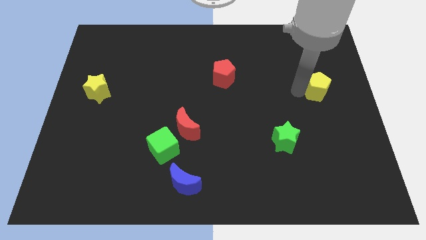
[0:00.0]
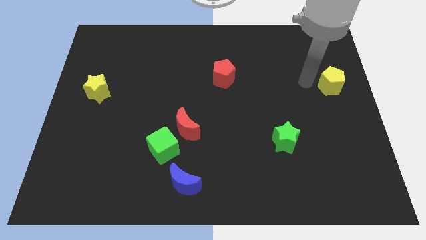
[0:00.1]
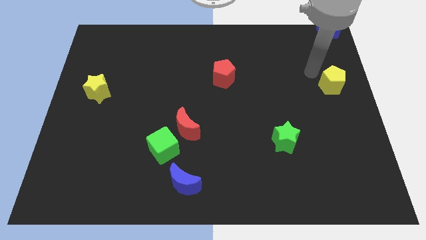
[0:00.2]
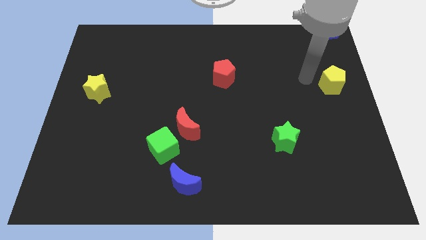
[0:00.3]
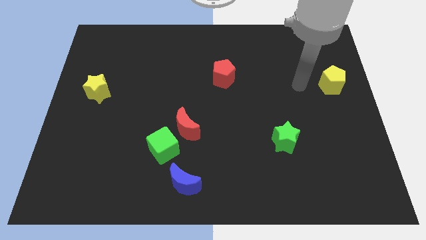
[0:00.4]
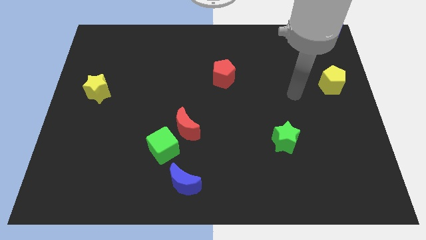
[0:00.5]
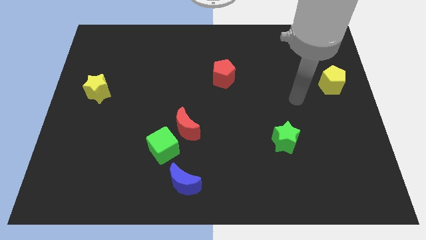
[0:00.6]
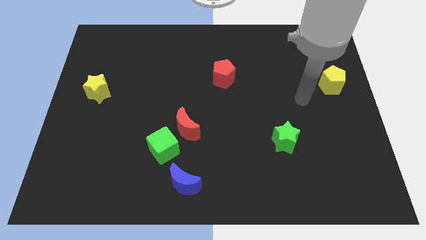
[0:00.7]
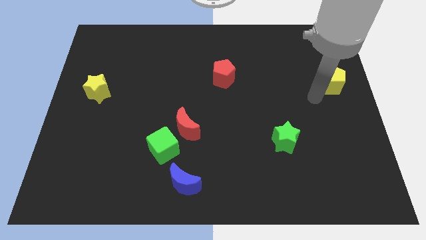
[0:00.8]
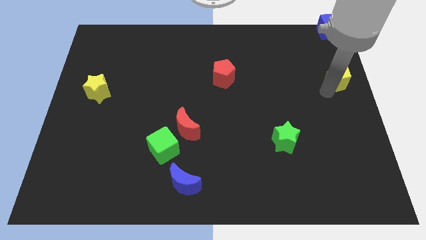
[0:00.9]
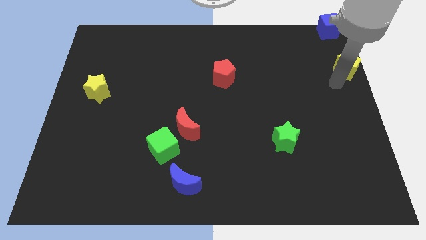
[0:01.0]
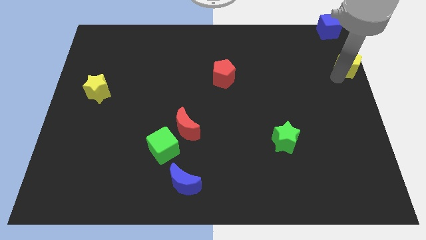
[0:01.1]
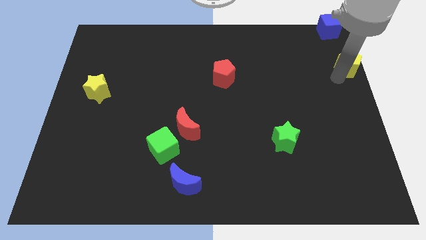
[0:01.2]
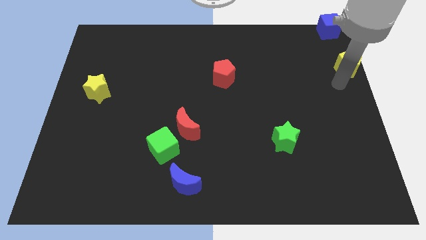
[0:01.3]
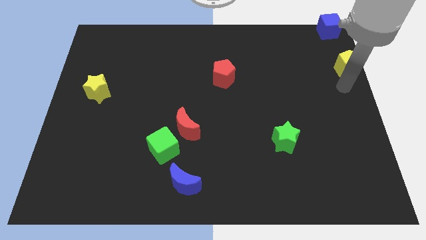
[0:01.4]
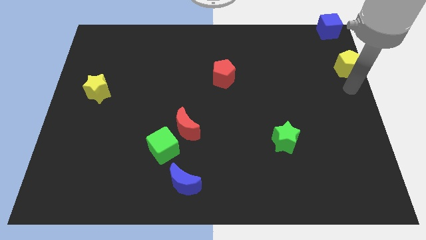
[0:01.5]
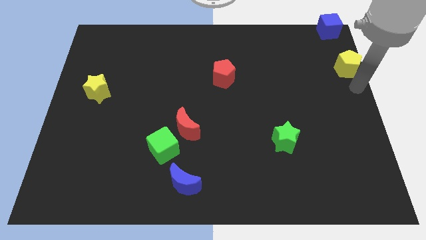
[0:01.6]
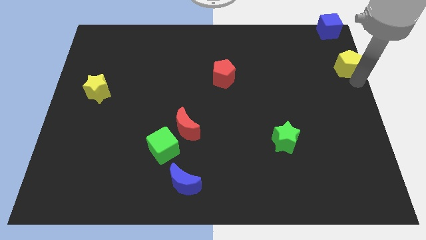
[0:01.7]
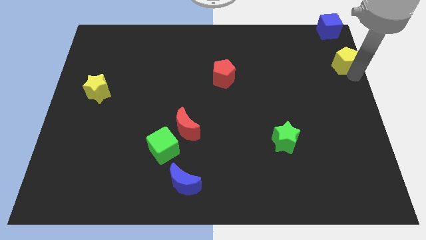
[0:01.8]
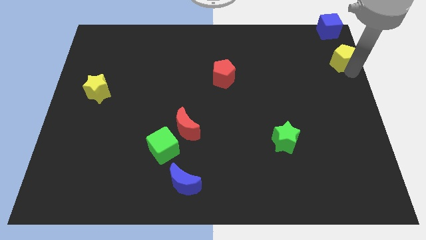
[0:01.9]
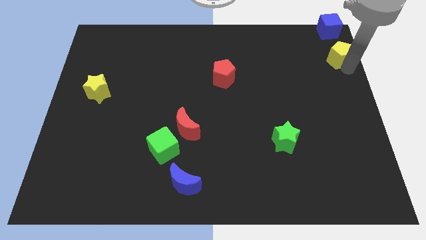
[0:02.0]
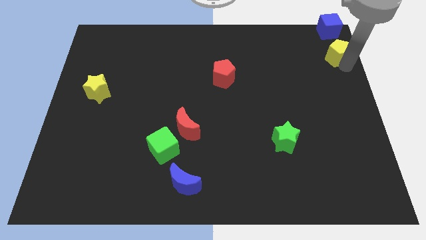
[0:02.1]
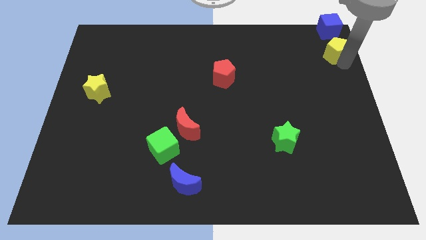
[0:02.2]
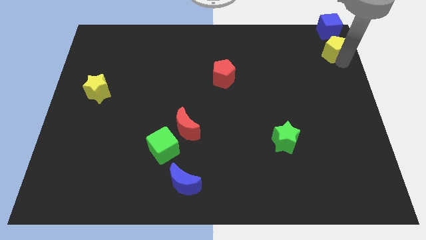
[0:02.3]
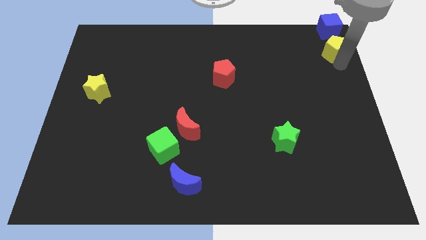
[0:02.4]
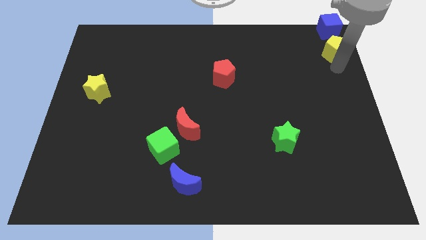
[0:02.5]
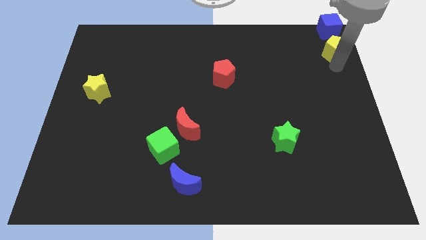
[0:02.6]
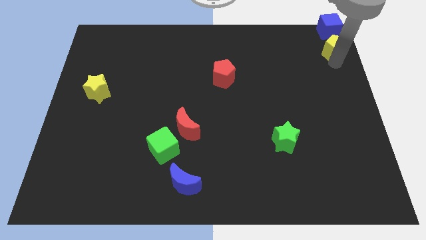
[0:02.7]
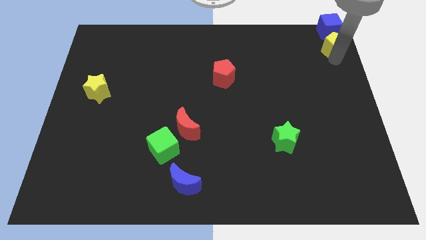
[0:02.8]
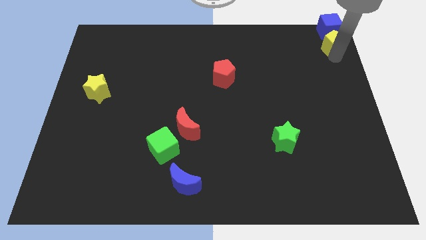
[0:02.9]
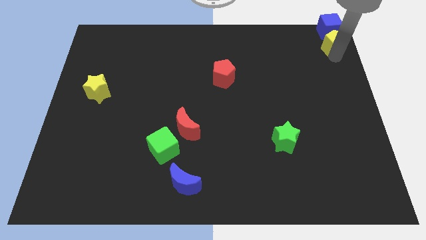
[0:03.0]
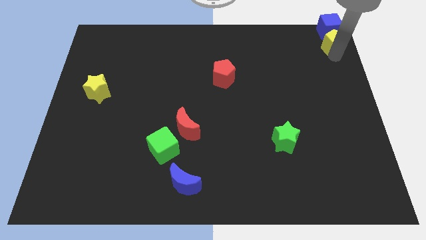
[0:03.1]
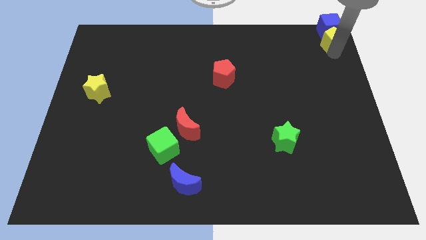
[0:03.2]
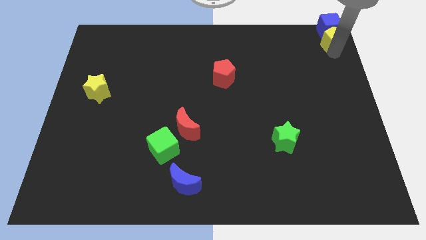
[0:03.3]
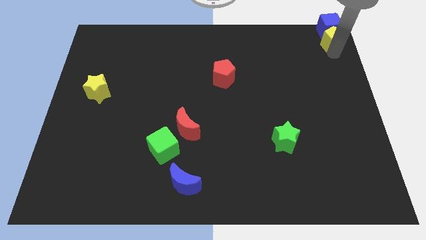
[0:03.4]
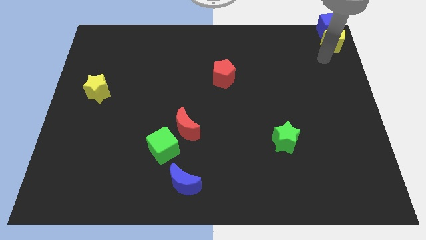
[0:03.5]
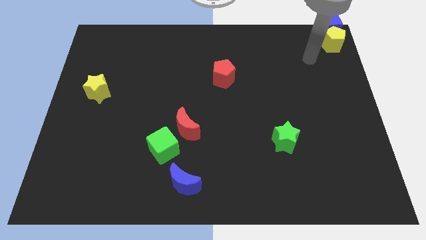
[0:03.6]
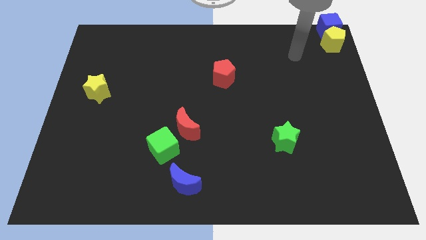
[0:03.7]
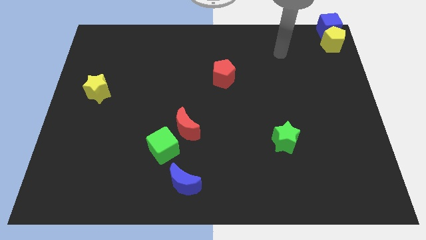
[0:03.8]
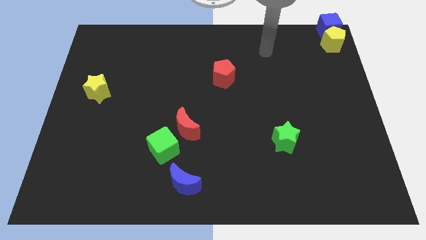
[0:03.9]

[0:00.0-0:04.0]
push the yellow pentagon into the blue cube

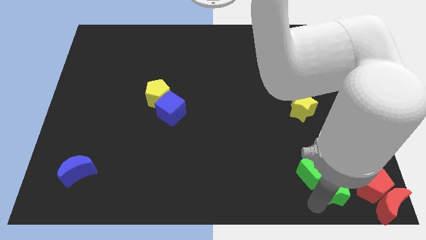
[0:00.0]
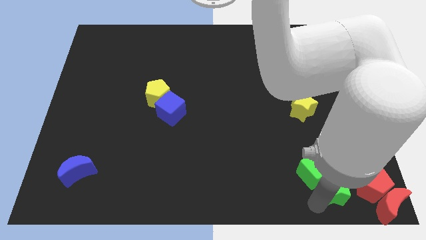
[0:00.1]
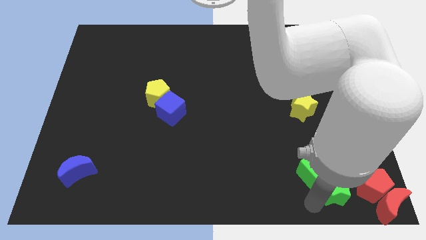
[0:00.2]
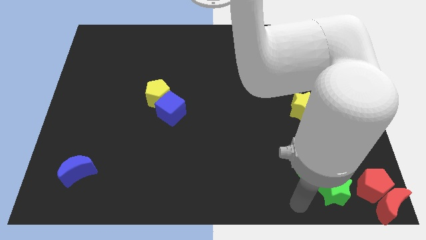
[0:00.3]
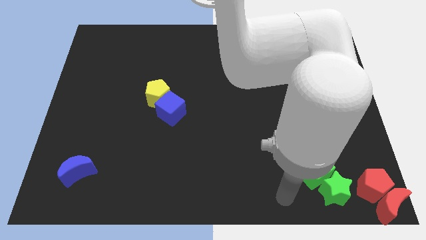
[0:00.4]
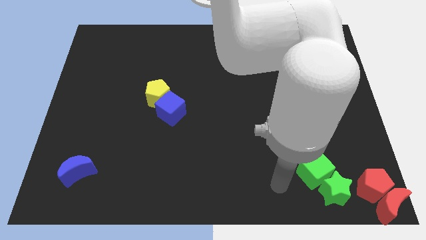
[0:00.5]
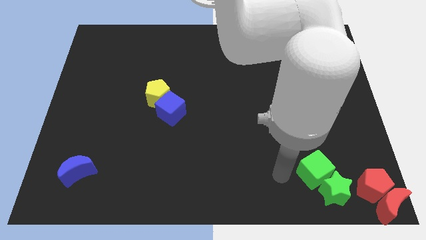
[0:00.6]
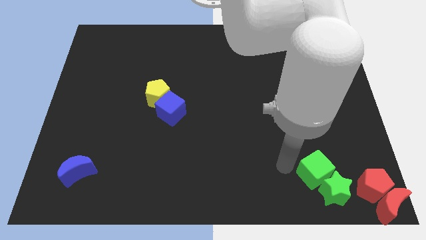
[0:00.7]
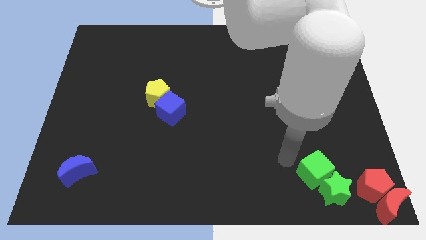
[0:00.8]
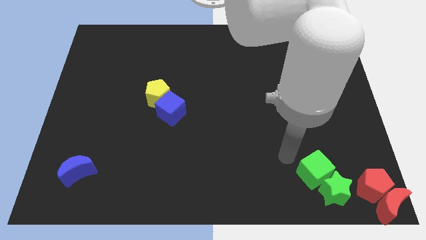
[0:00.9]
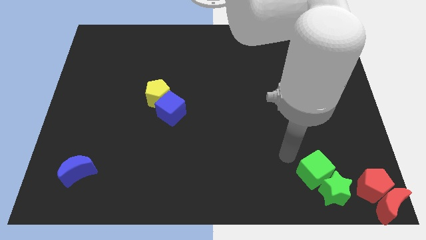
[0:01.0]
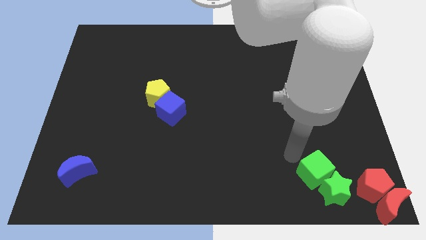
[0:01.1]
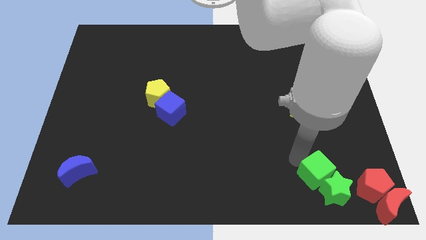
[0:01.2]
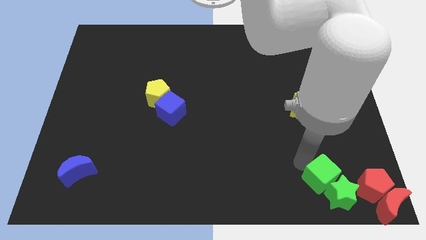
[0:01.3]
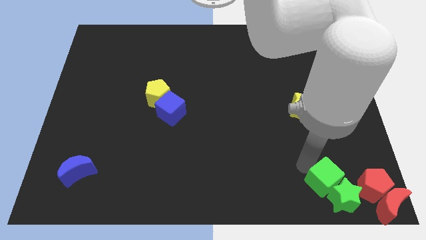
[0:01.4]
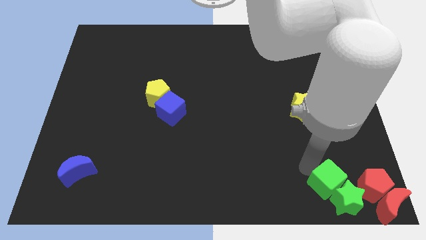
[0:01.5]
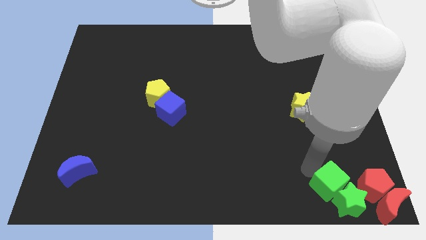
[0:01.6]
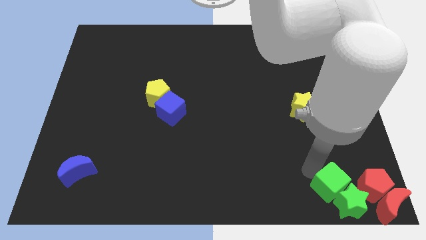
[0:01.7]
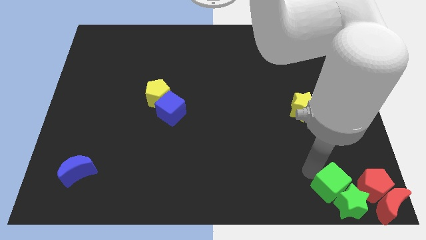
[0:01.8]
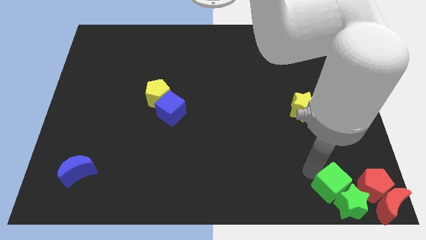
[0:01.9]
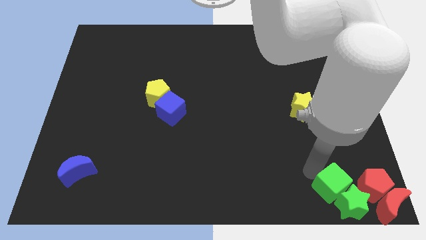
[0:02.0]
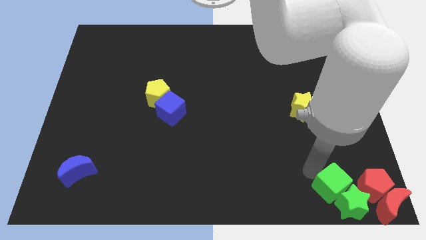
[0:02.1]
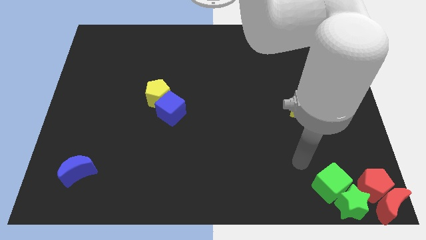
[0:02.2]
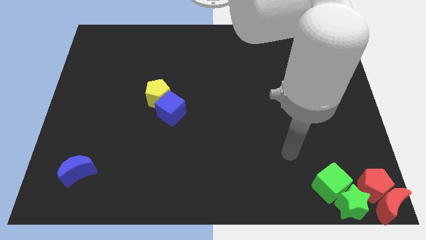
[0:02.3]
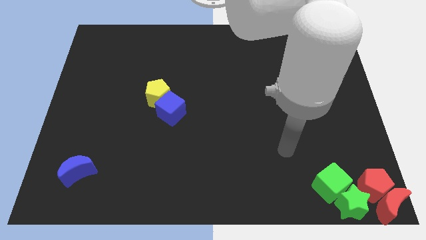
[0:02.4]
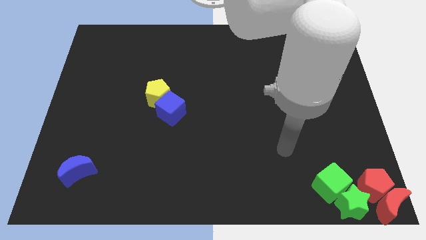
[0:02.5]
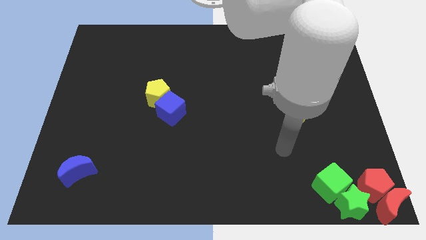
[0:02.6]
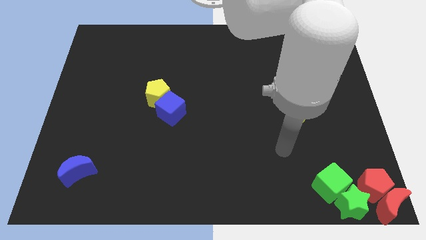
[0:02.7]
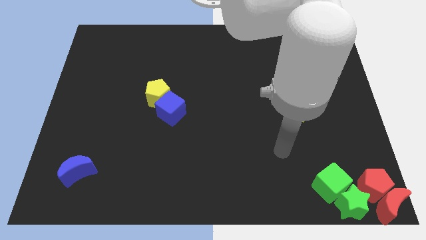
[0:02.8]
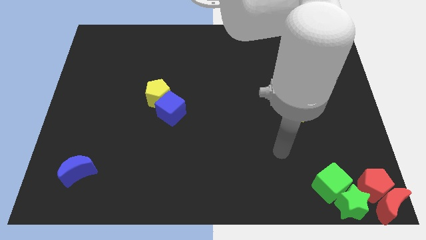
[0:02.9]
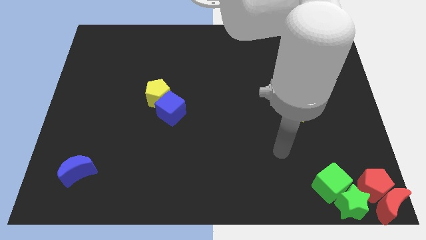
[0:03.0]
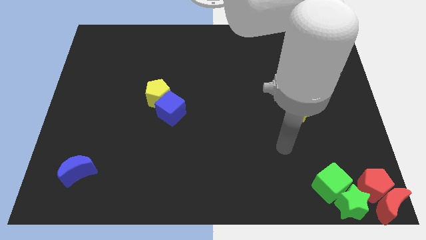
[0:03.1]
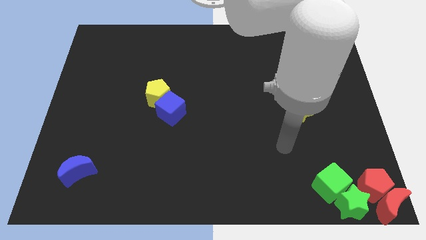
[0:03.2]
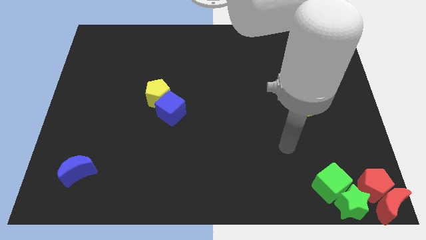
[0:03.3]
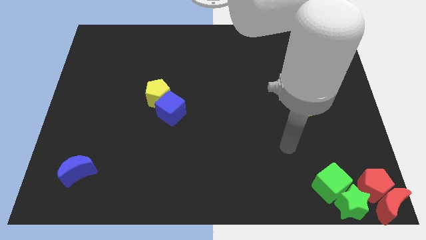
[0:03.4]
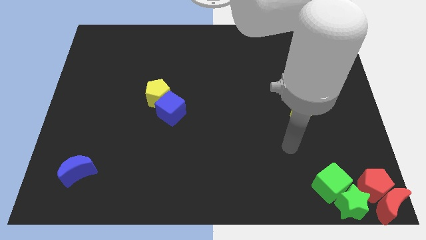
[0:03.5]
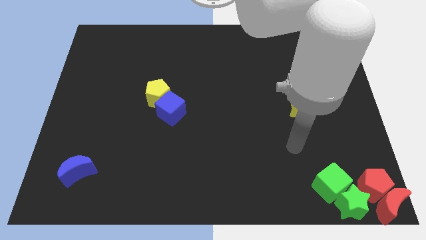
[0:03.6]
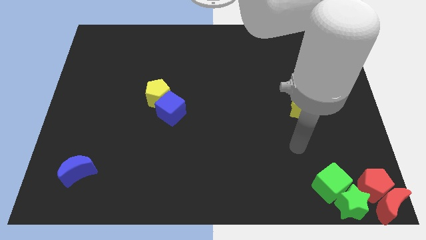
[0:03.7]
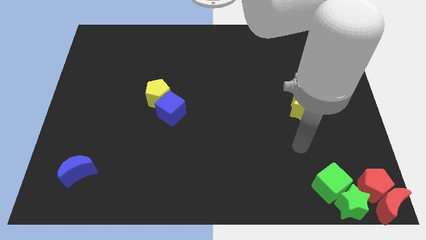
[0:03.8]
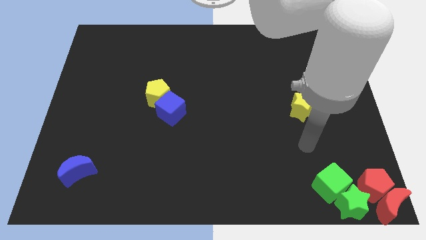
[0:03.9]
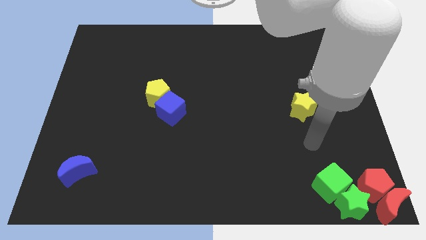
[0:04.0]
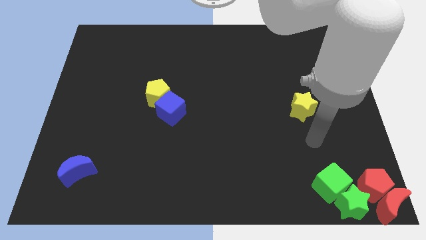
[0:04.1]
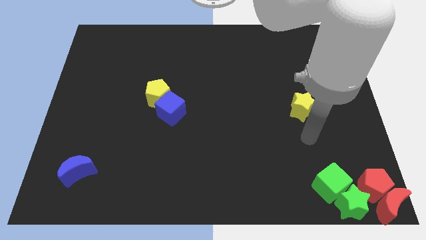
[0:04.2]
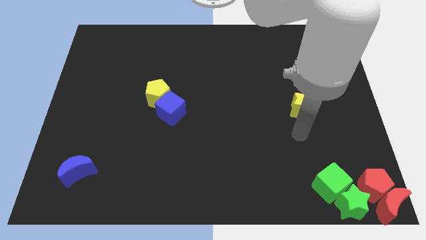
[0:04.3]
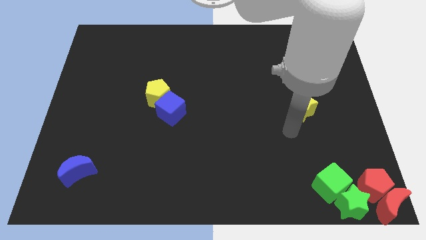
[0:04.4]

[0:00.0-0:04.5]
place the green blocks beside the red blocks

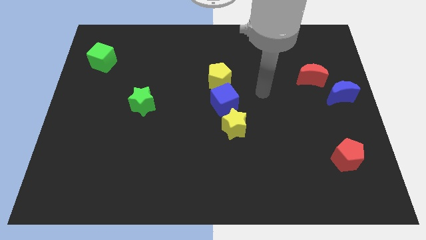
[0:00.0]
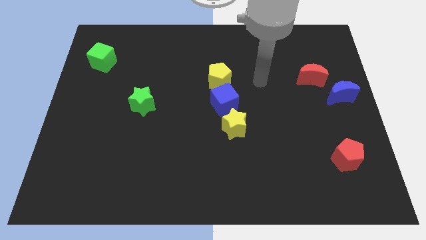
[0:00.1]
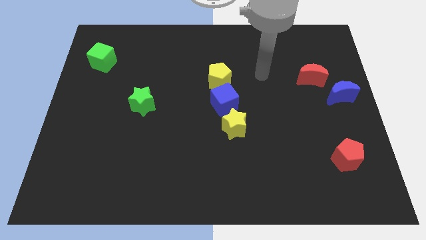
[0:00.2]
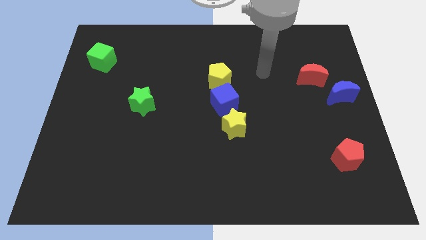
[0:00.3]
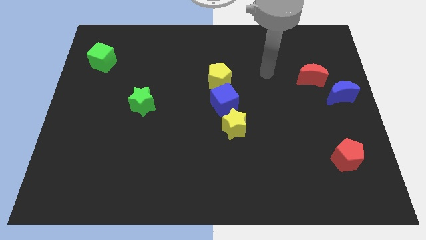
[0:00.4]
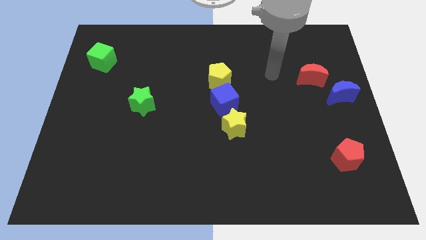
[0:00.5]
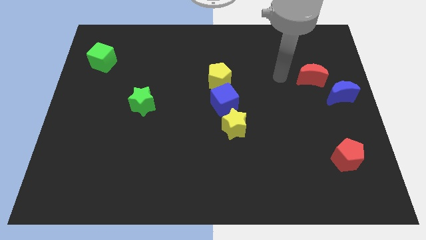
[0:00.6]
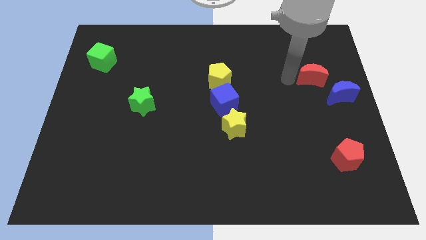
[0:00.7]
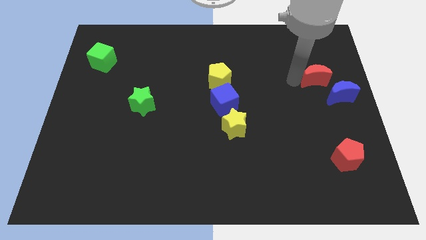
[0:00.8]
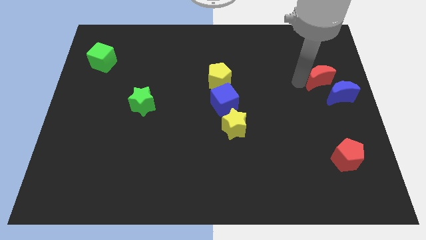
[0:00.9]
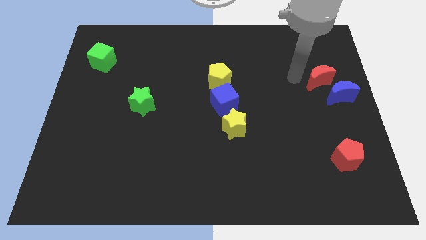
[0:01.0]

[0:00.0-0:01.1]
move the red moon close to the blue moon
